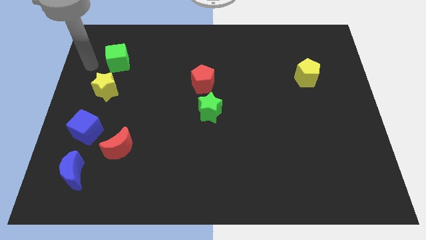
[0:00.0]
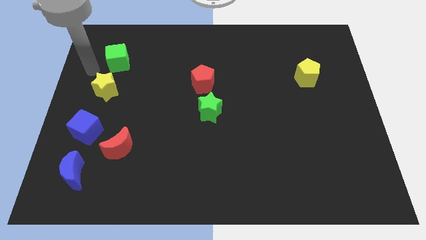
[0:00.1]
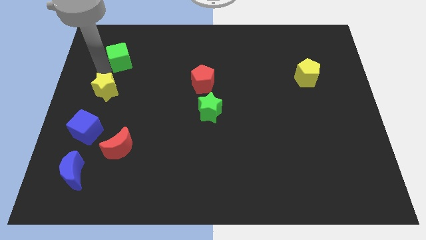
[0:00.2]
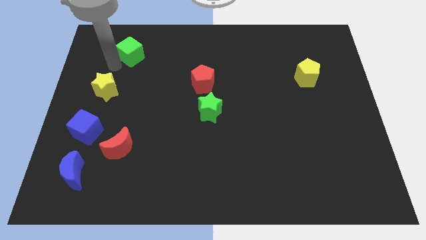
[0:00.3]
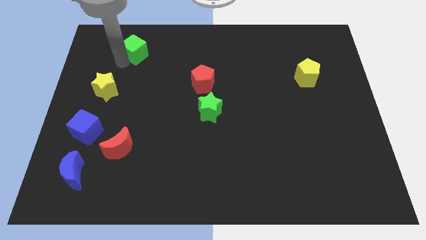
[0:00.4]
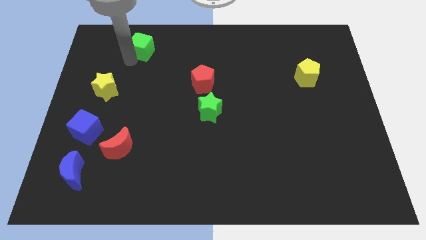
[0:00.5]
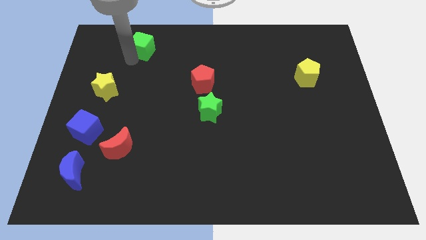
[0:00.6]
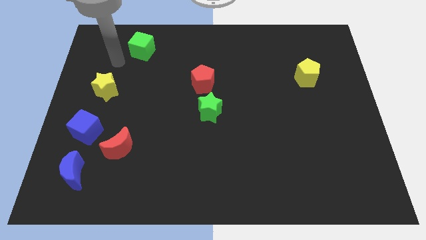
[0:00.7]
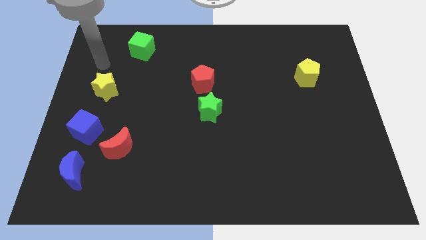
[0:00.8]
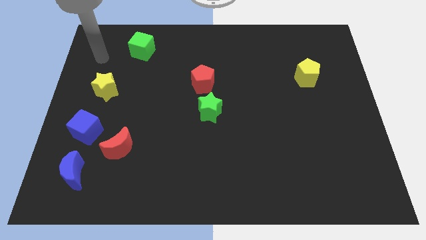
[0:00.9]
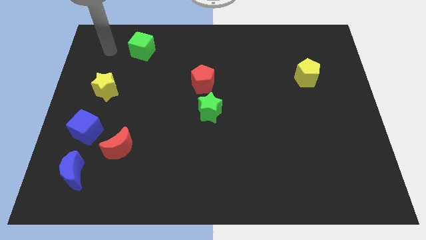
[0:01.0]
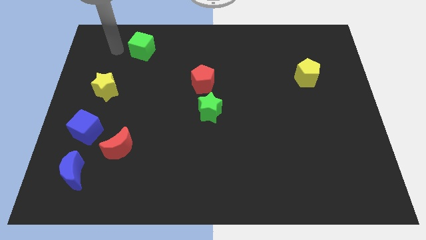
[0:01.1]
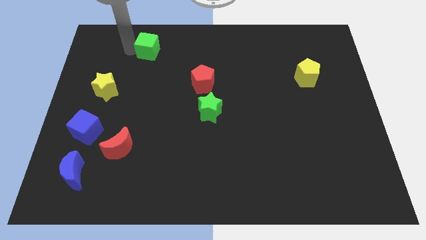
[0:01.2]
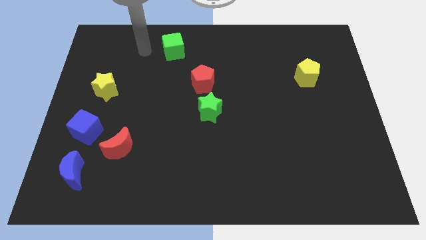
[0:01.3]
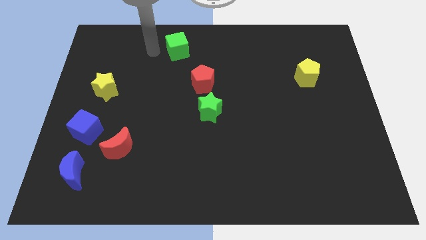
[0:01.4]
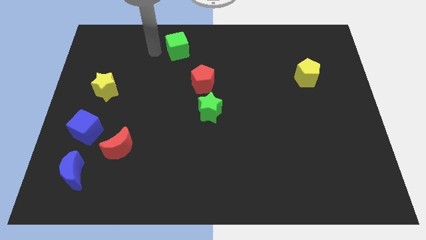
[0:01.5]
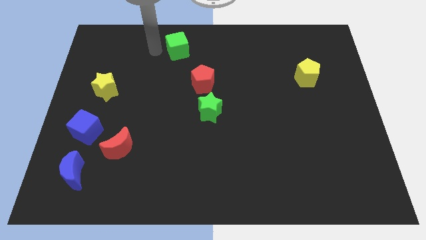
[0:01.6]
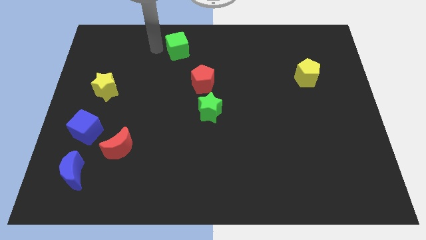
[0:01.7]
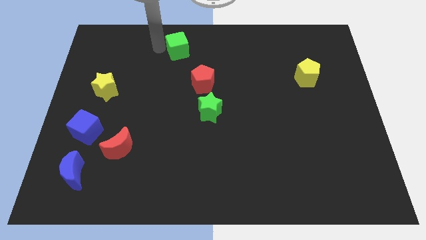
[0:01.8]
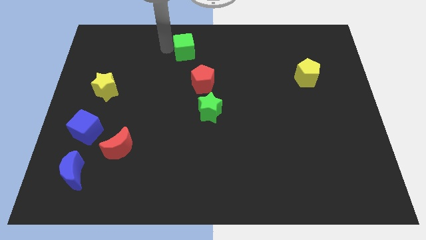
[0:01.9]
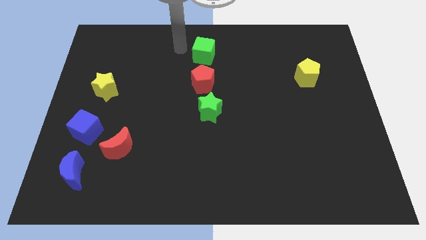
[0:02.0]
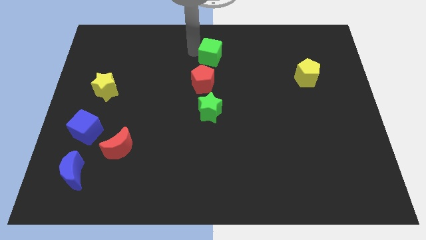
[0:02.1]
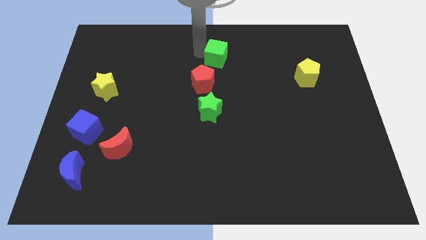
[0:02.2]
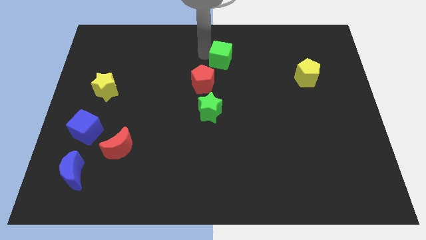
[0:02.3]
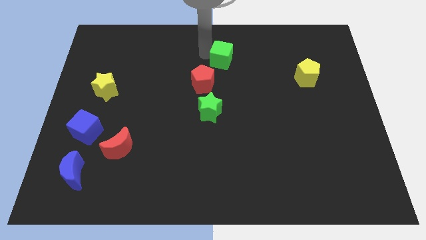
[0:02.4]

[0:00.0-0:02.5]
move the green cube towards the top right side of the red pentagon

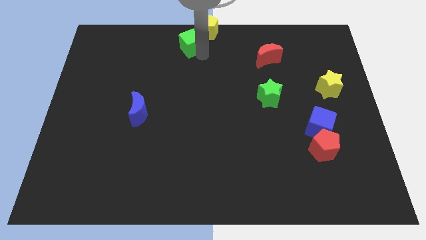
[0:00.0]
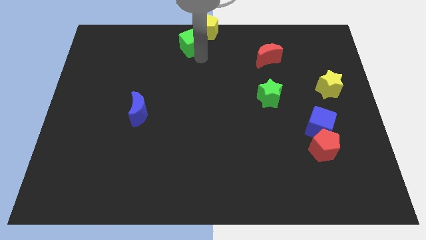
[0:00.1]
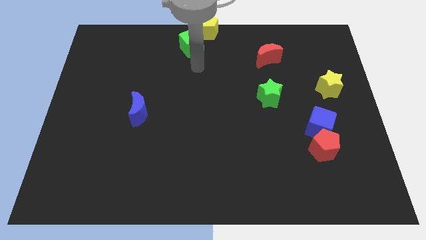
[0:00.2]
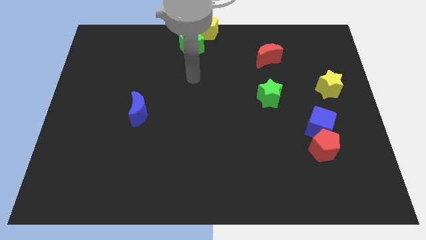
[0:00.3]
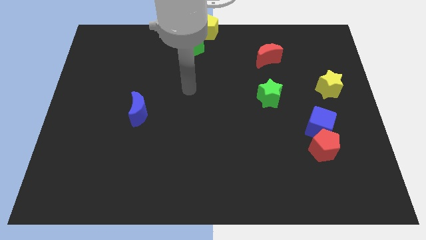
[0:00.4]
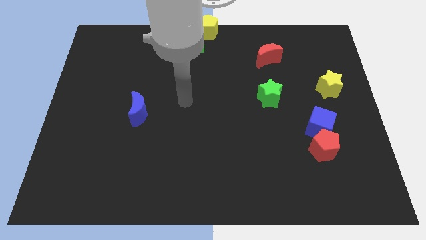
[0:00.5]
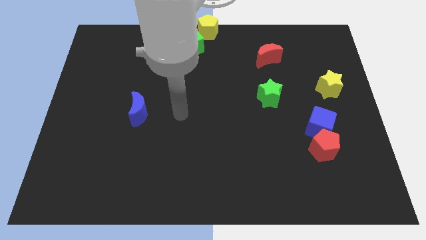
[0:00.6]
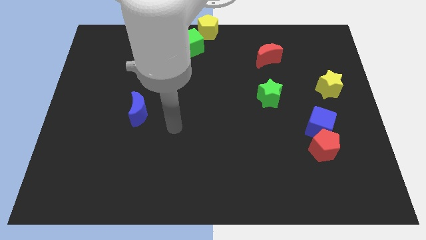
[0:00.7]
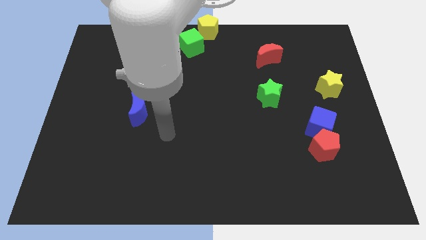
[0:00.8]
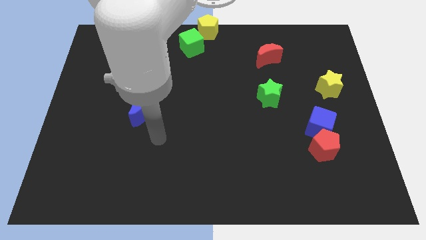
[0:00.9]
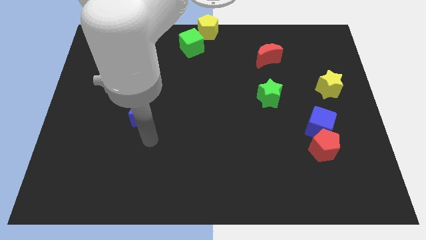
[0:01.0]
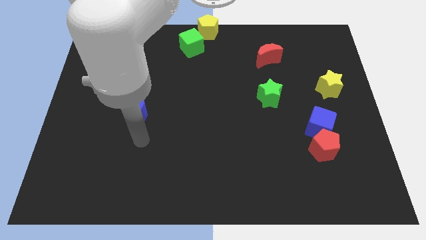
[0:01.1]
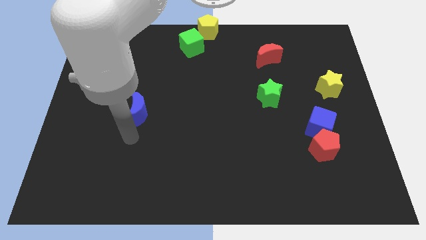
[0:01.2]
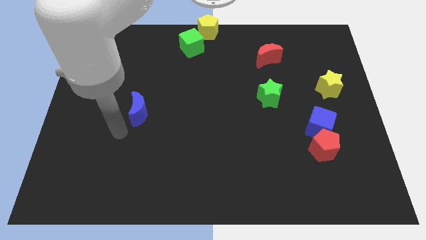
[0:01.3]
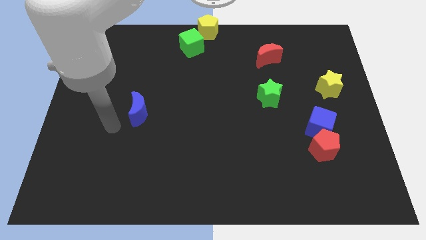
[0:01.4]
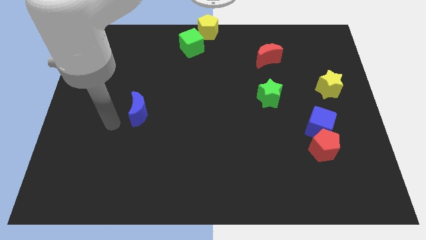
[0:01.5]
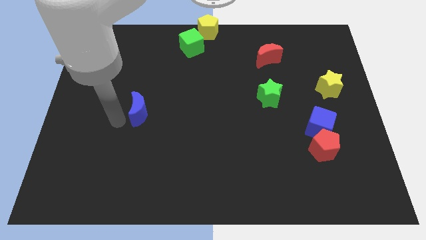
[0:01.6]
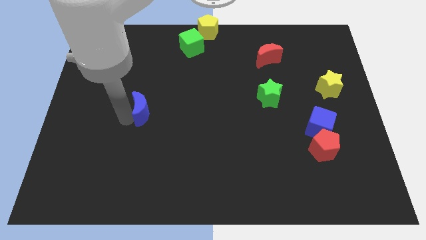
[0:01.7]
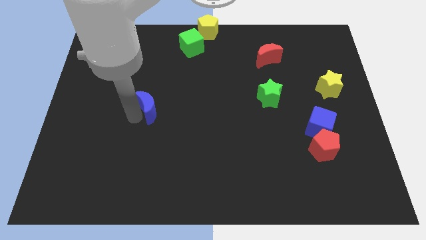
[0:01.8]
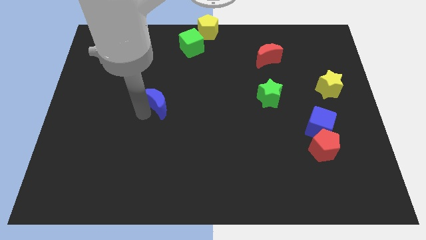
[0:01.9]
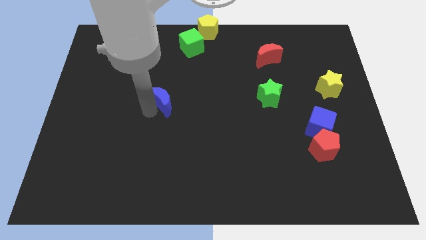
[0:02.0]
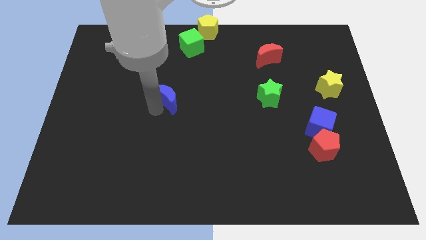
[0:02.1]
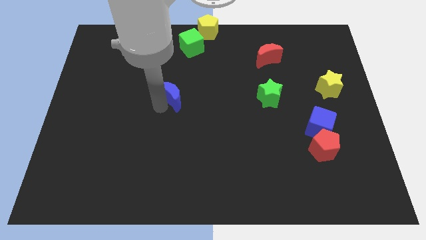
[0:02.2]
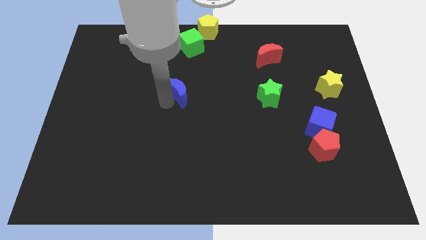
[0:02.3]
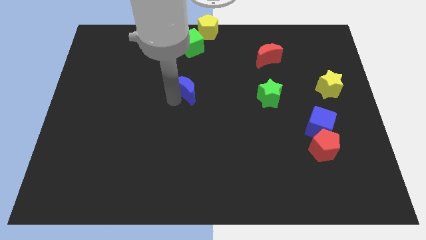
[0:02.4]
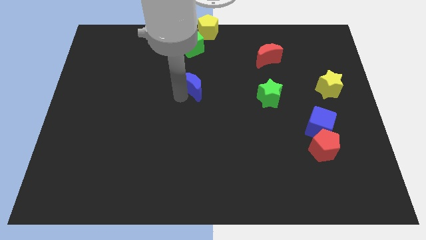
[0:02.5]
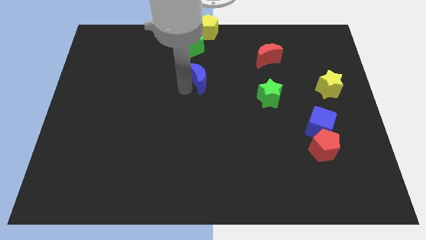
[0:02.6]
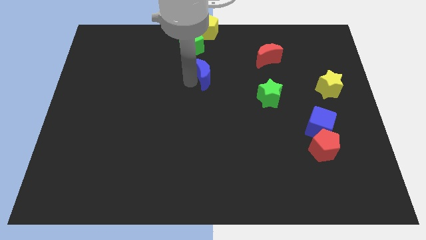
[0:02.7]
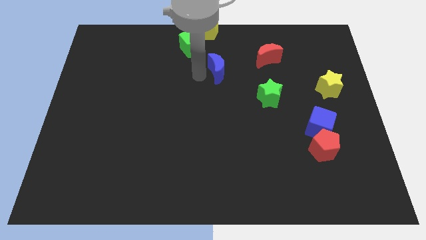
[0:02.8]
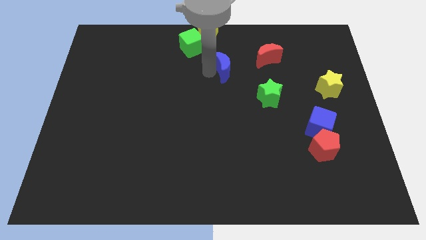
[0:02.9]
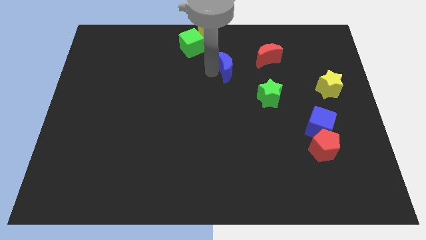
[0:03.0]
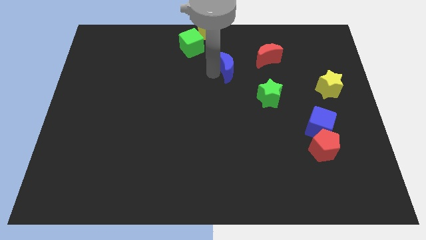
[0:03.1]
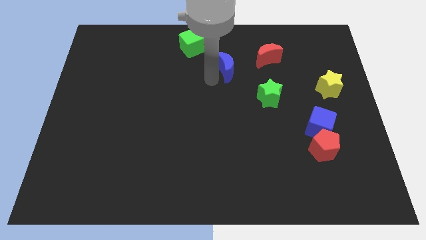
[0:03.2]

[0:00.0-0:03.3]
push the blue moon towards the red moon

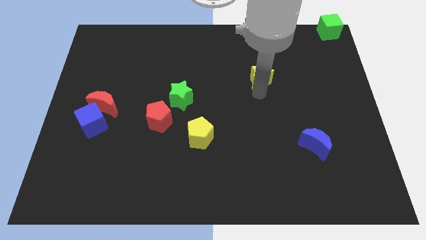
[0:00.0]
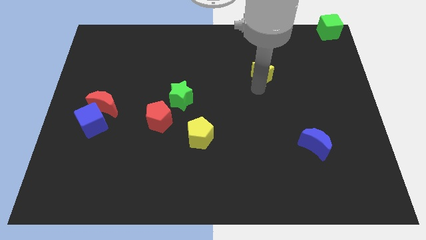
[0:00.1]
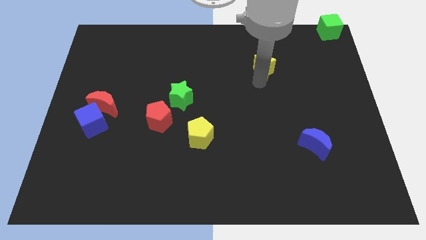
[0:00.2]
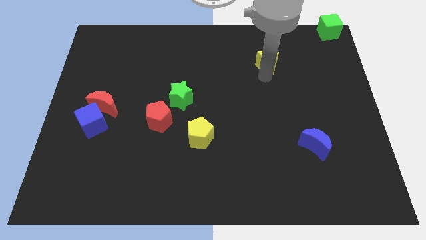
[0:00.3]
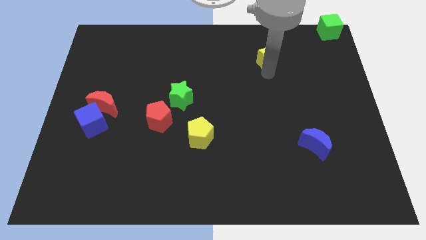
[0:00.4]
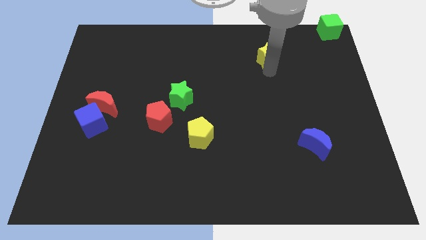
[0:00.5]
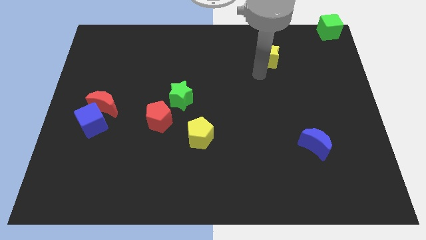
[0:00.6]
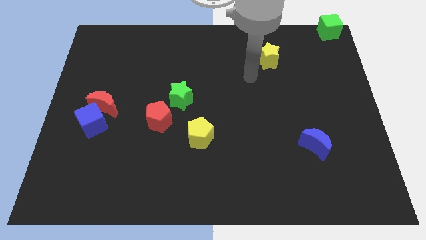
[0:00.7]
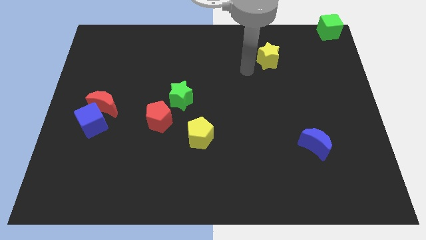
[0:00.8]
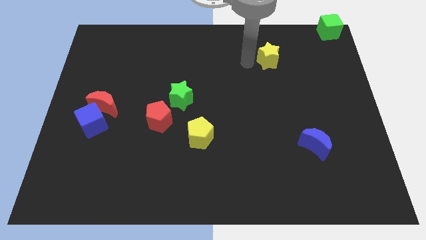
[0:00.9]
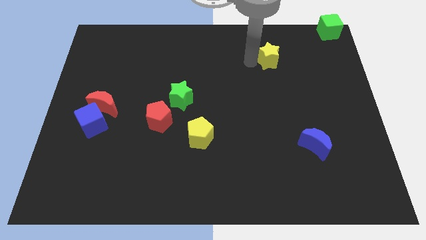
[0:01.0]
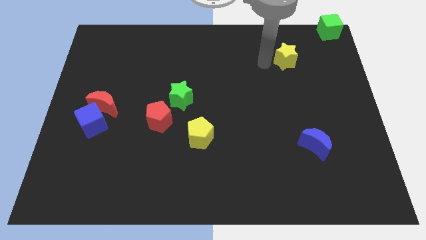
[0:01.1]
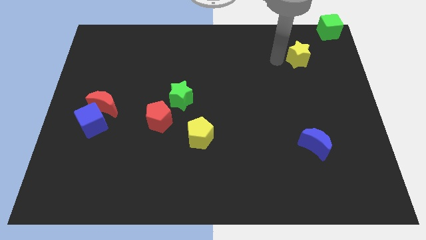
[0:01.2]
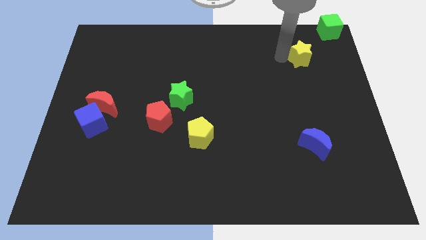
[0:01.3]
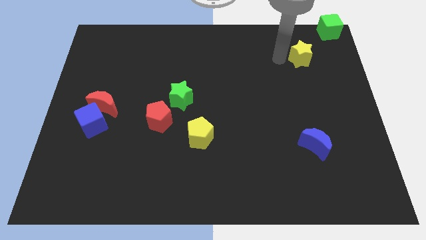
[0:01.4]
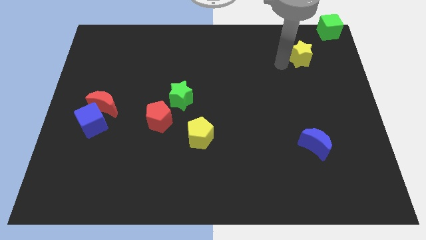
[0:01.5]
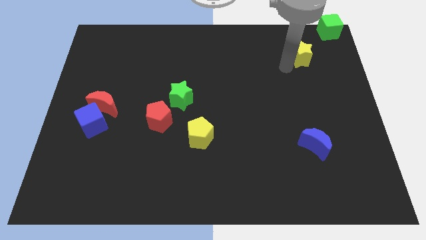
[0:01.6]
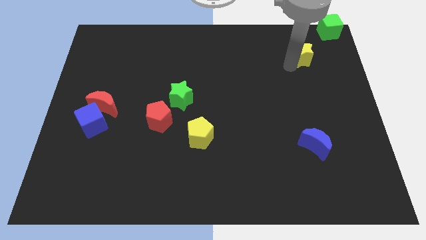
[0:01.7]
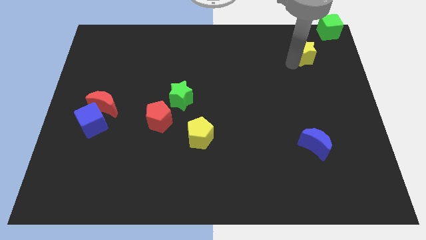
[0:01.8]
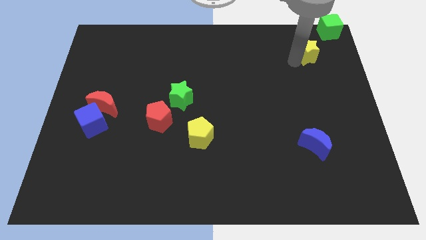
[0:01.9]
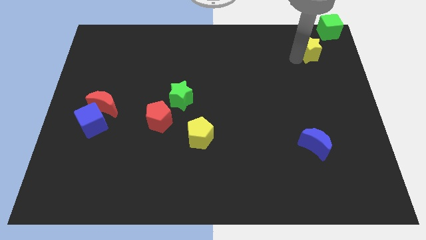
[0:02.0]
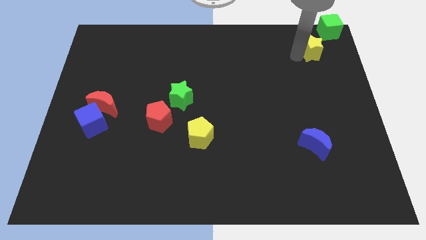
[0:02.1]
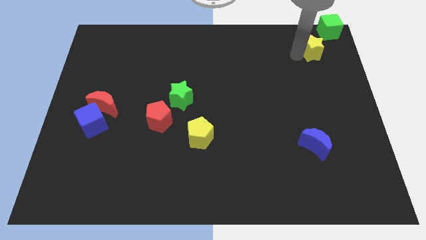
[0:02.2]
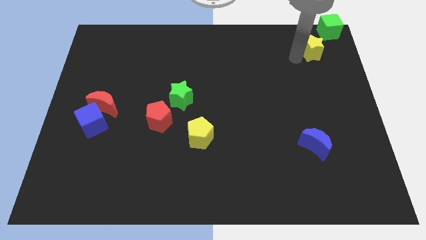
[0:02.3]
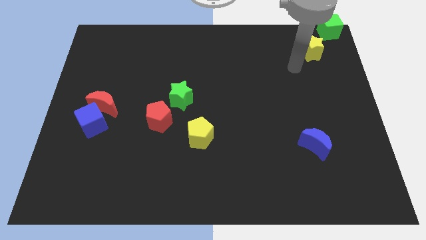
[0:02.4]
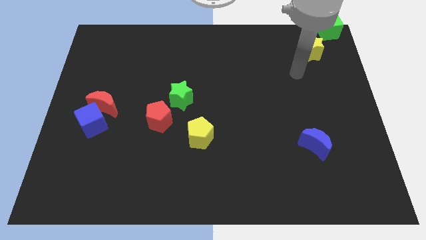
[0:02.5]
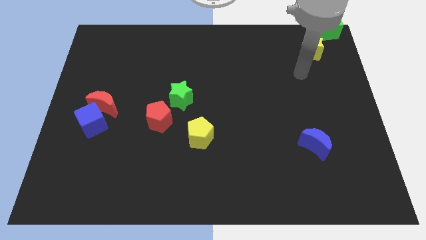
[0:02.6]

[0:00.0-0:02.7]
place the yellow star close to the green cube

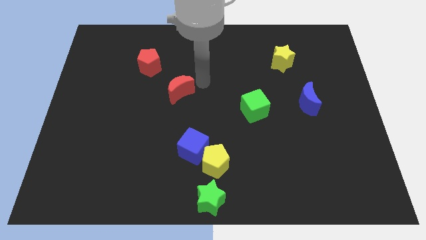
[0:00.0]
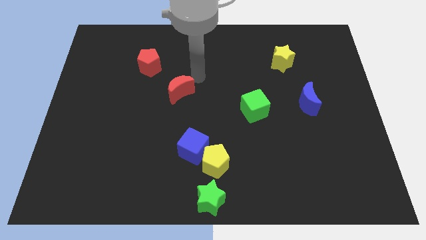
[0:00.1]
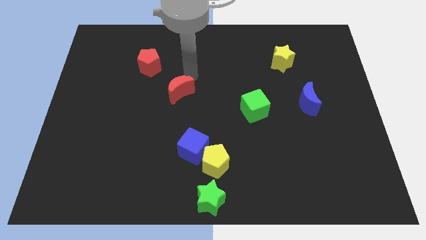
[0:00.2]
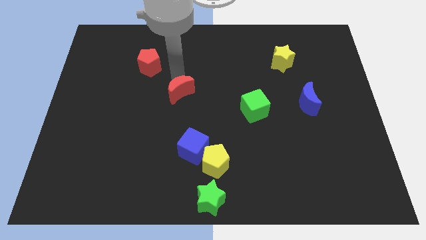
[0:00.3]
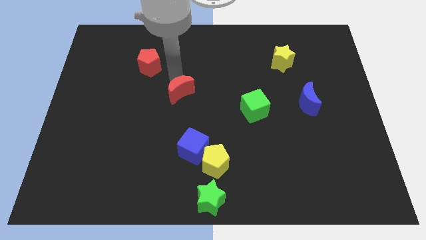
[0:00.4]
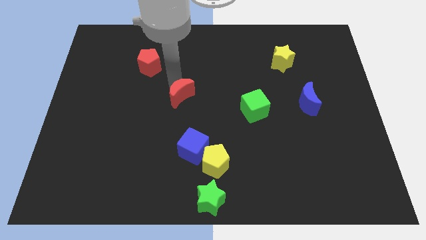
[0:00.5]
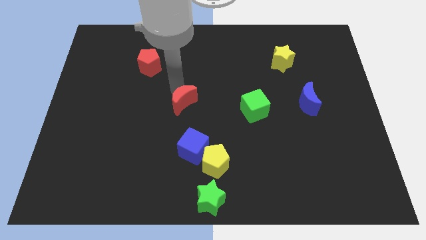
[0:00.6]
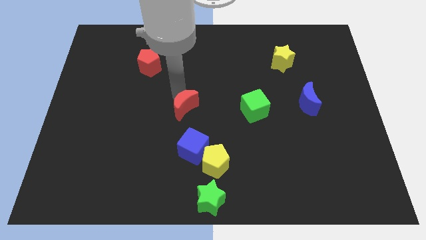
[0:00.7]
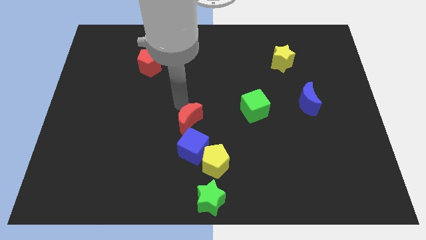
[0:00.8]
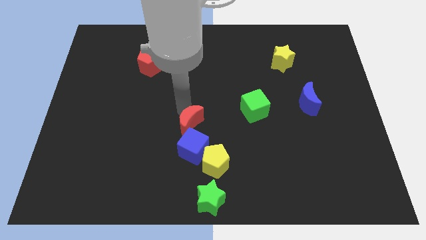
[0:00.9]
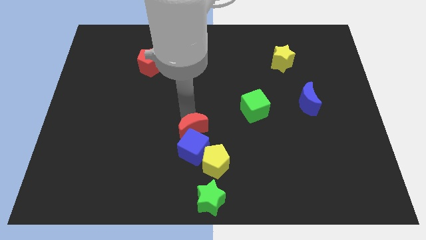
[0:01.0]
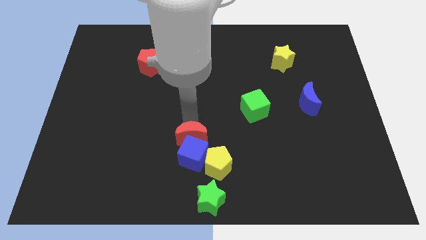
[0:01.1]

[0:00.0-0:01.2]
push the red crescent into the blue cube
